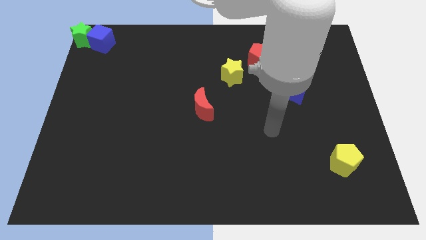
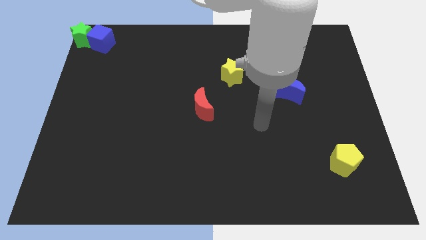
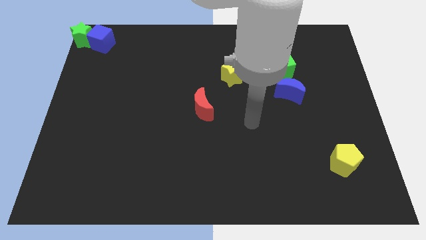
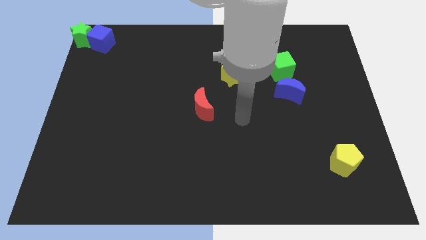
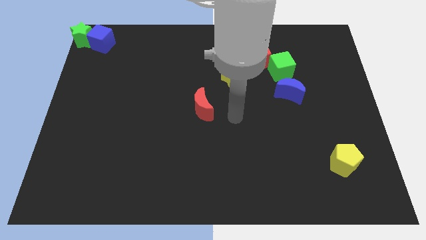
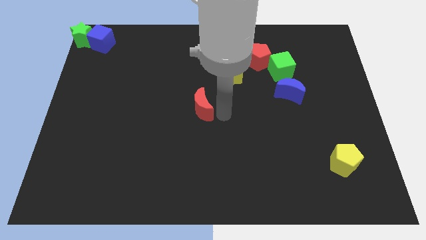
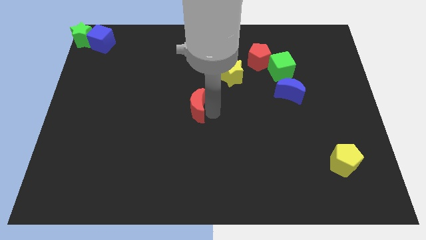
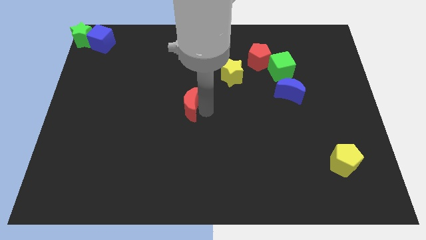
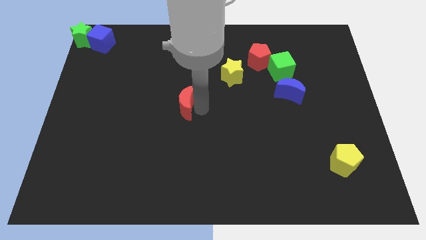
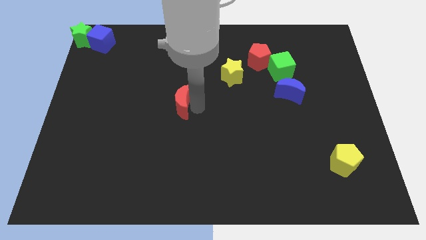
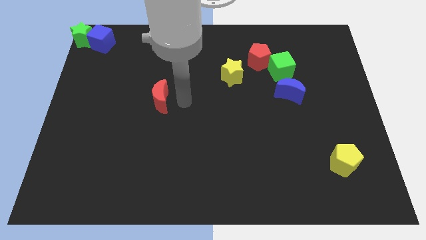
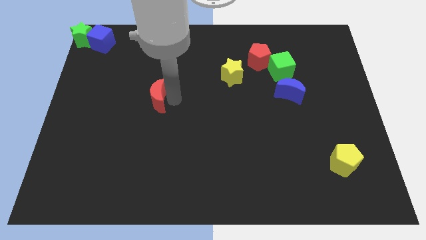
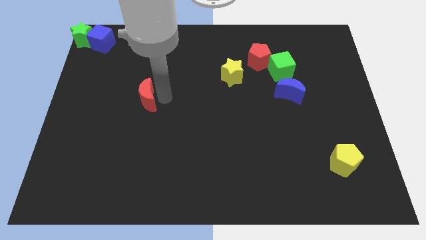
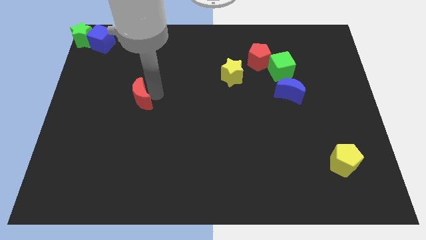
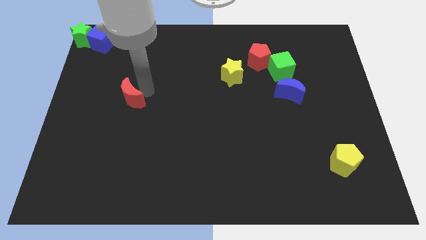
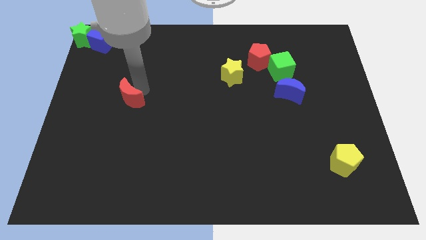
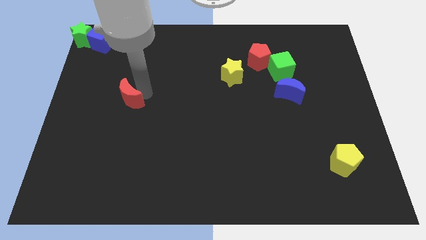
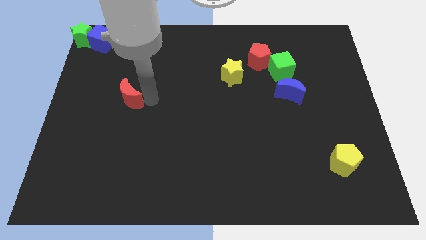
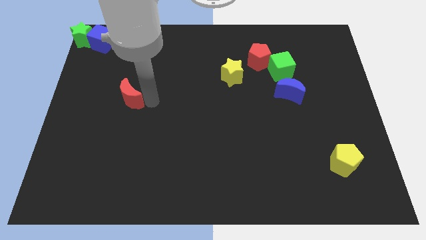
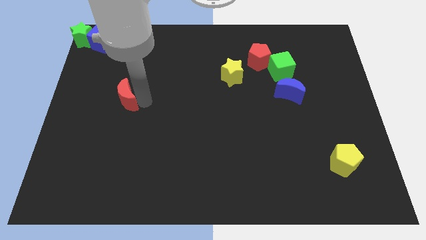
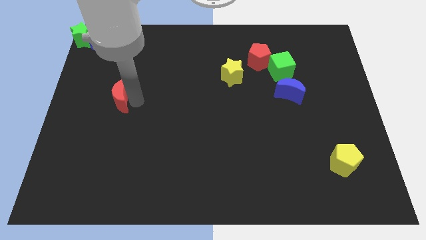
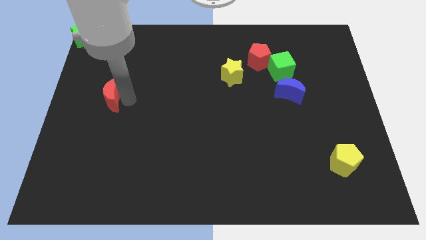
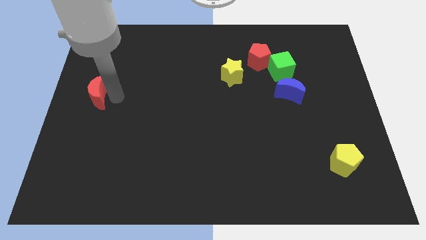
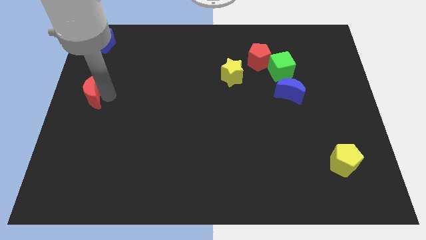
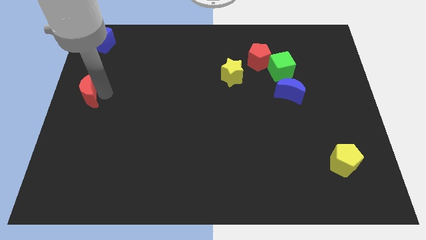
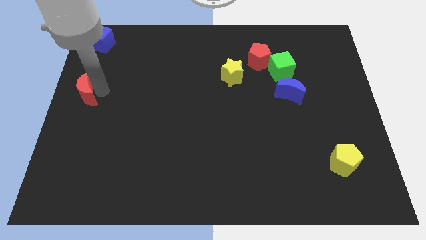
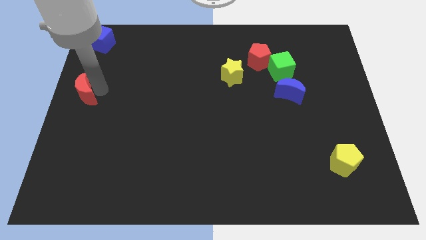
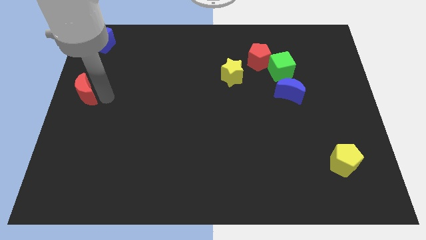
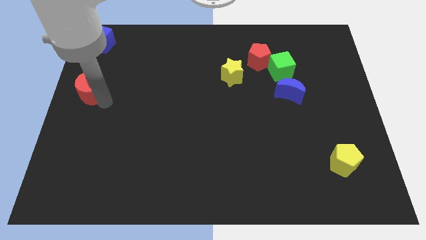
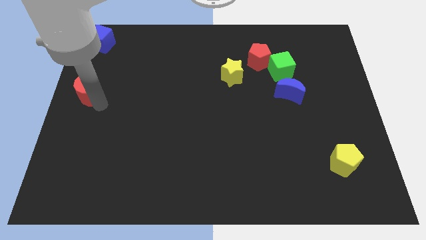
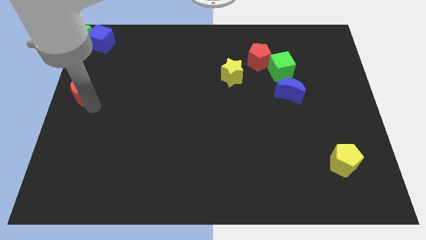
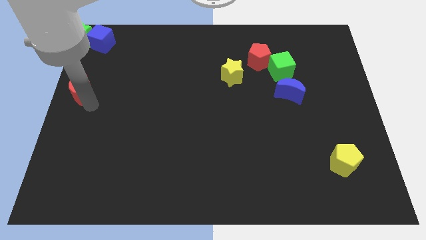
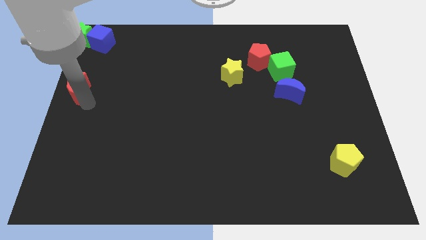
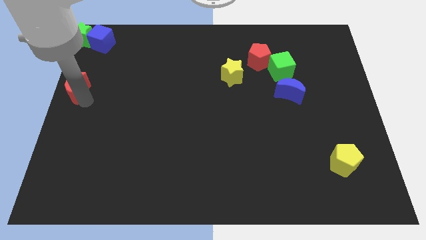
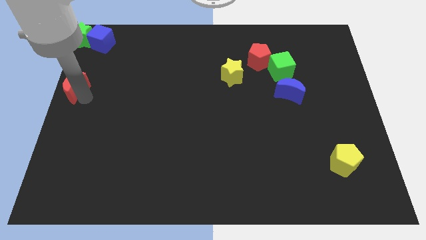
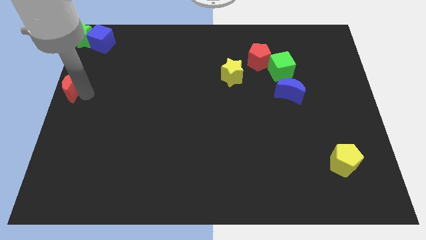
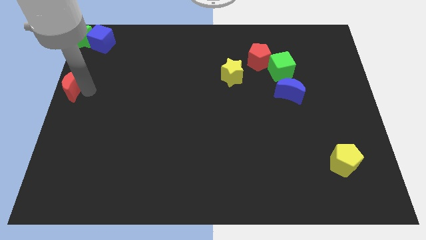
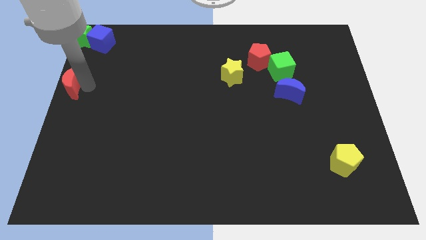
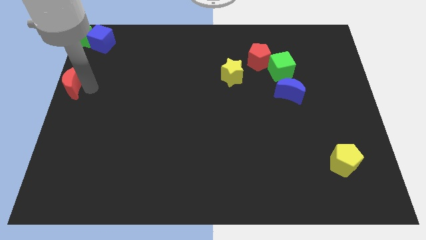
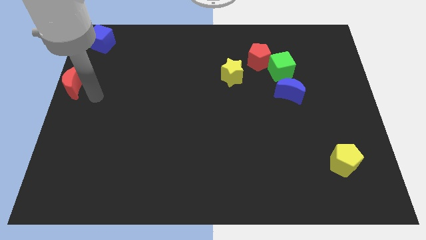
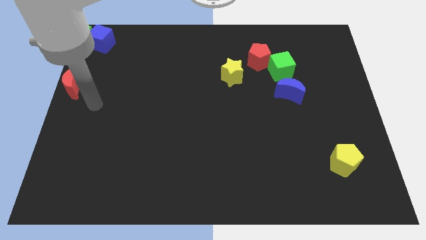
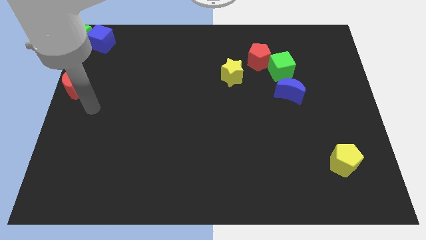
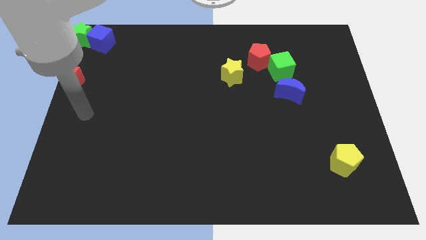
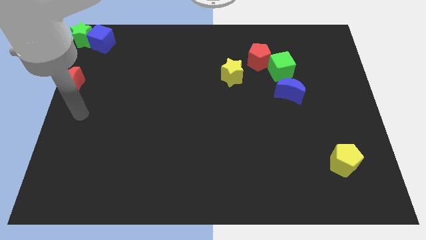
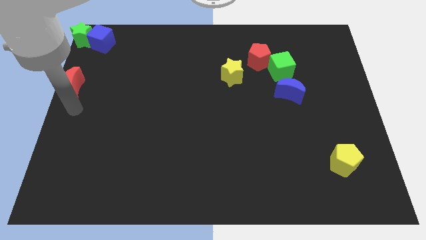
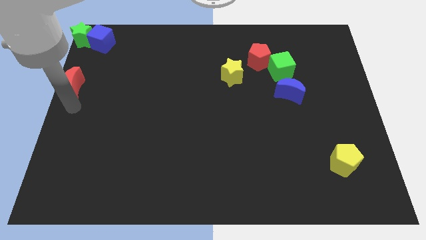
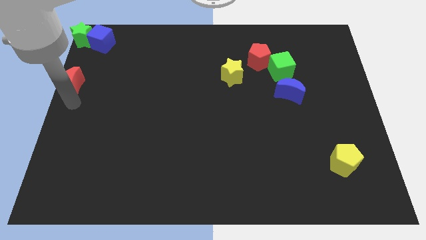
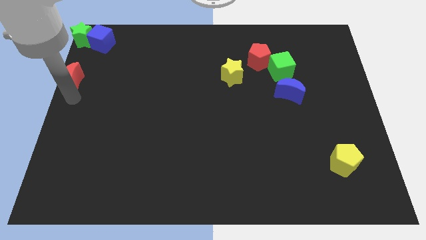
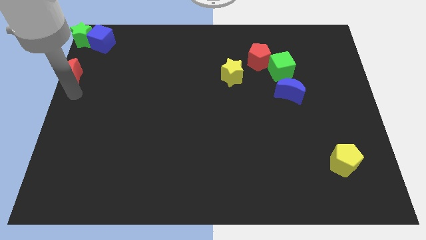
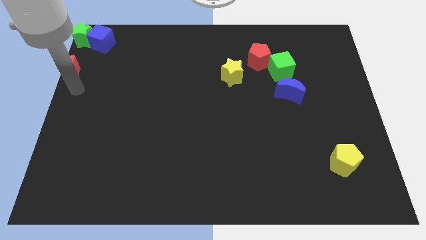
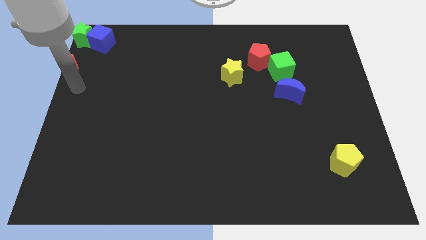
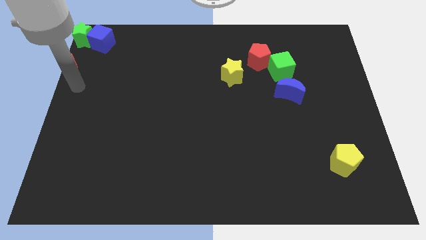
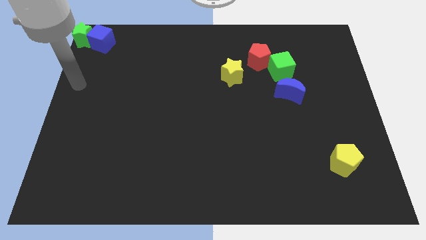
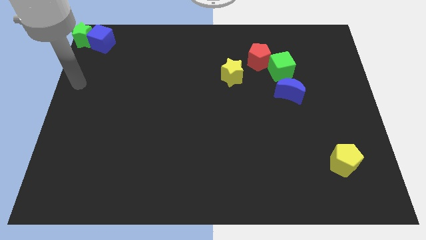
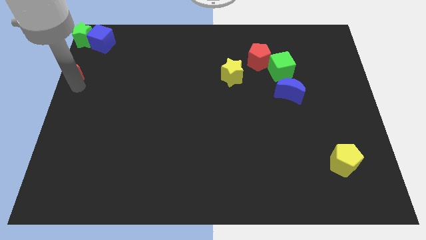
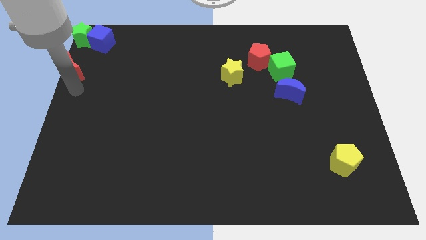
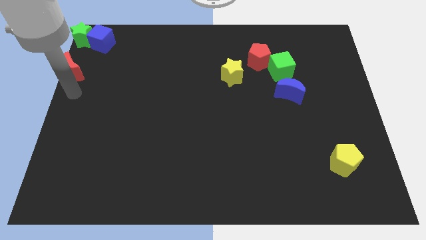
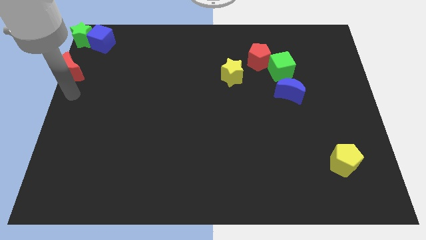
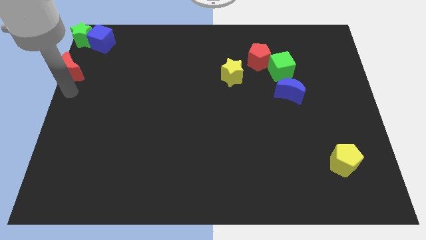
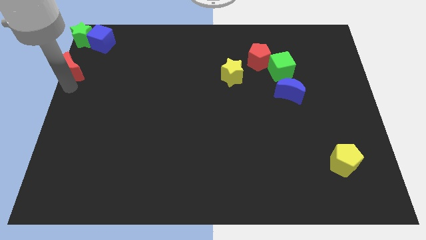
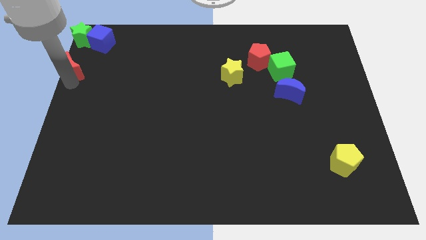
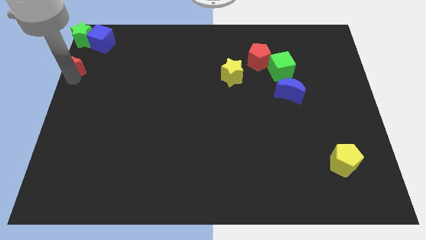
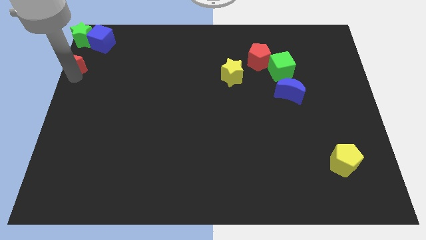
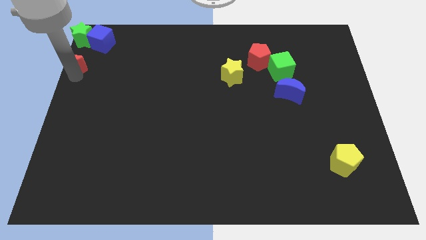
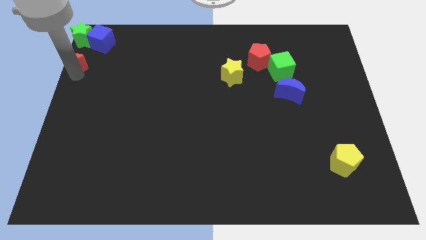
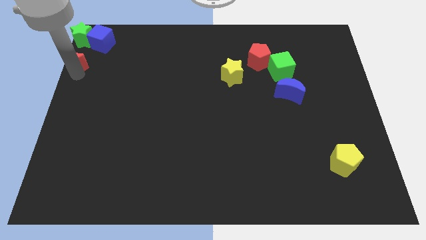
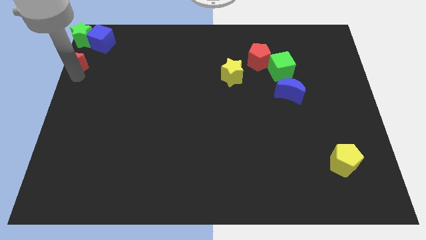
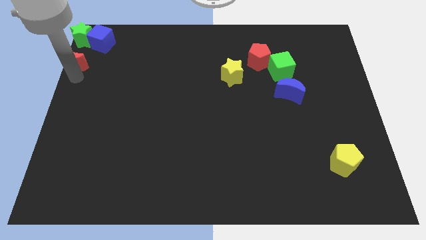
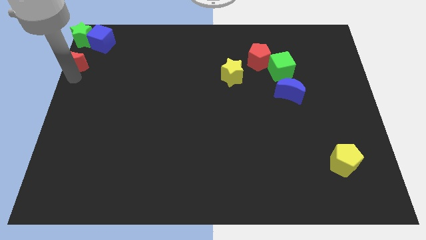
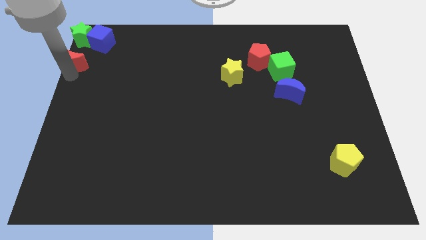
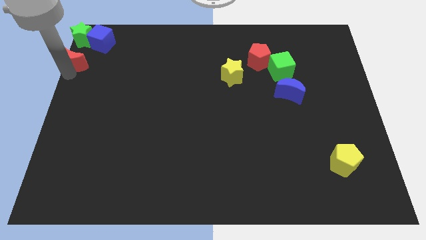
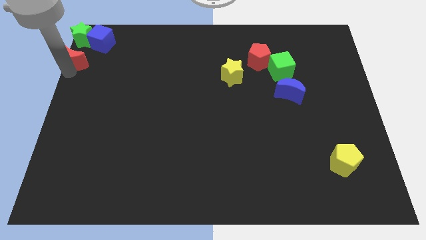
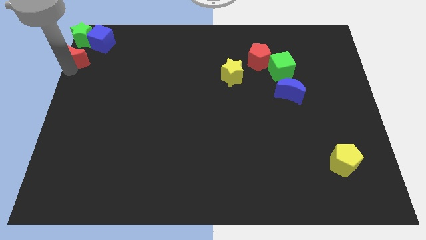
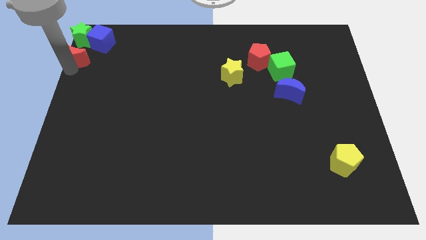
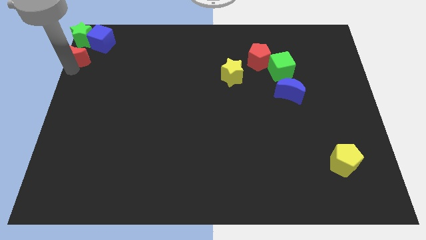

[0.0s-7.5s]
move the red moon towards the bottom of green star

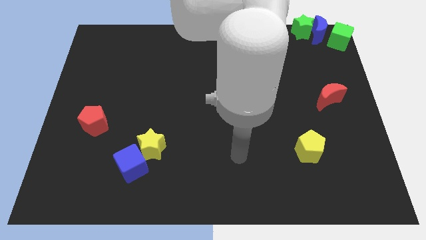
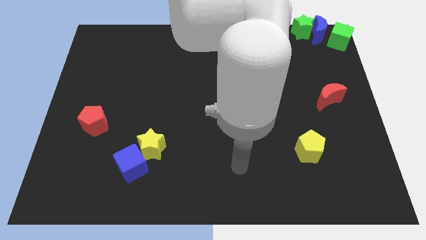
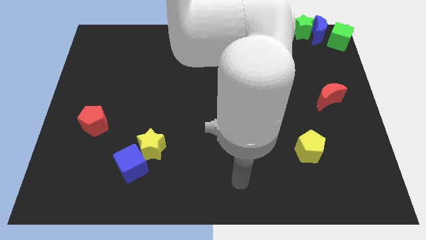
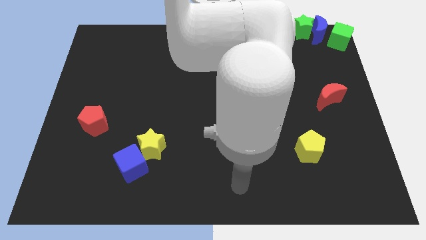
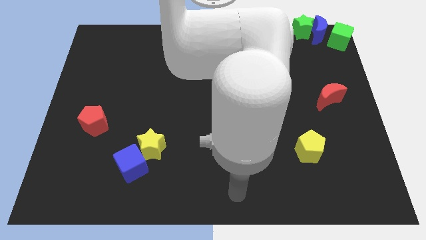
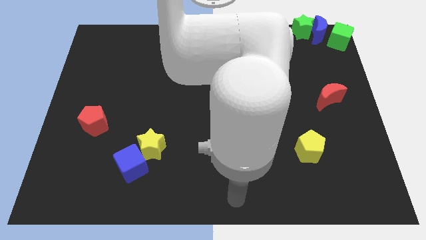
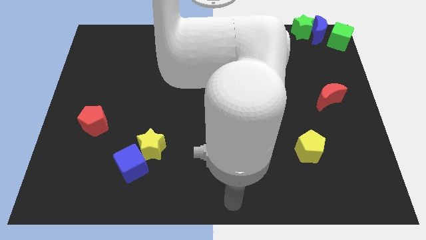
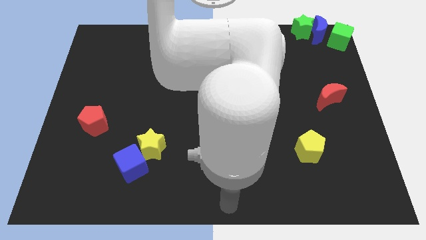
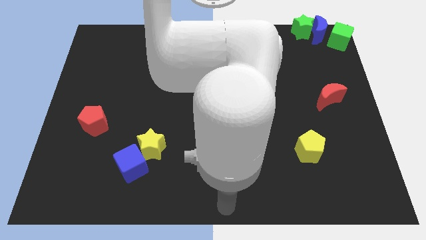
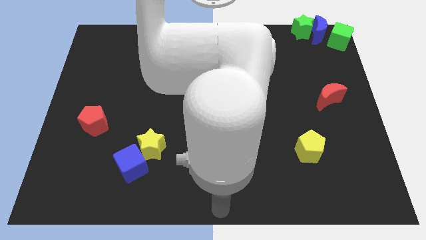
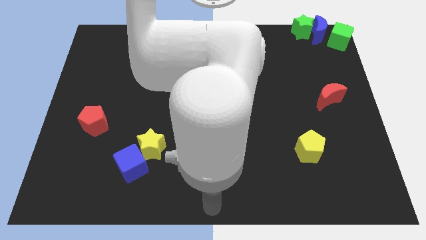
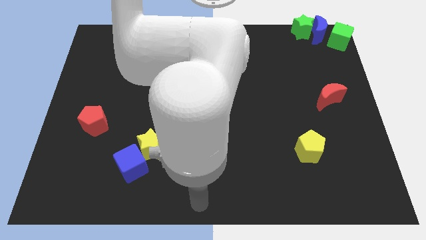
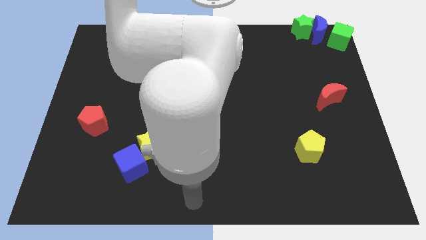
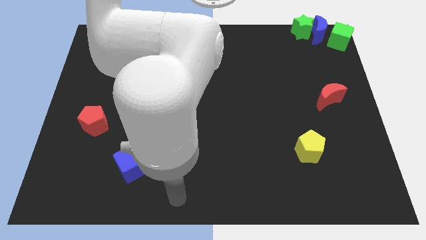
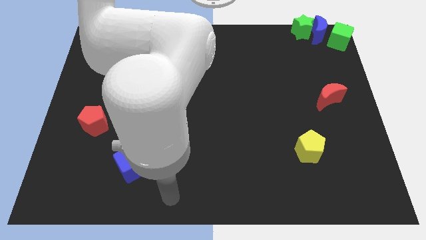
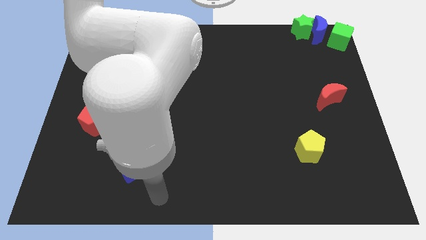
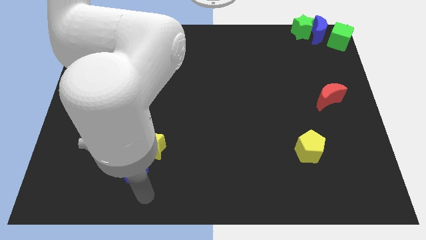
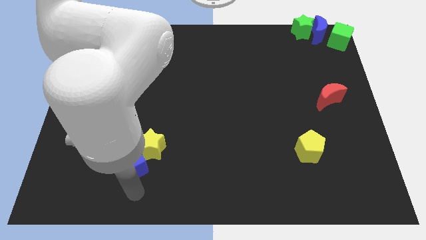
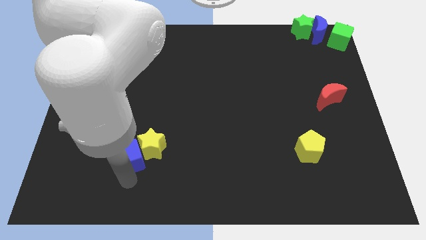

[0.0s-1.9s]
move your arm to the bottom of the blue cube
